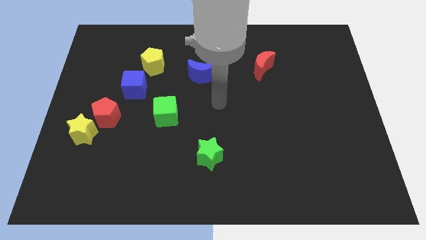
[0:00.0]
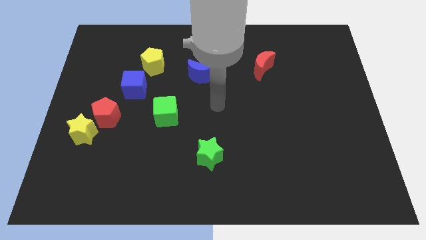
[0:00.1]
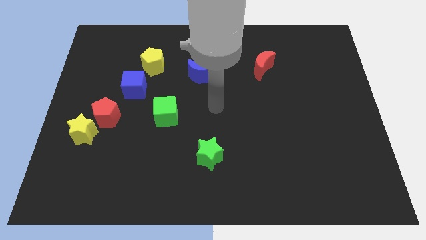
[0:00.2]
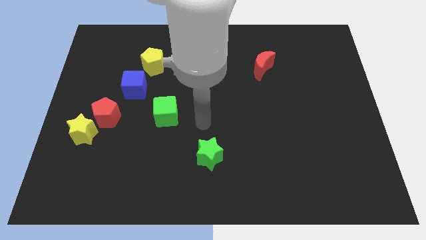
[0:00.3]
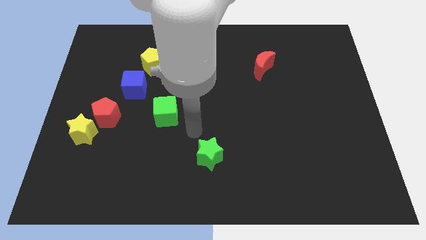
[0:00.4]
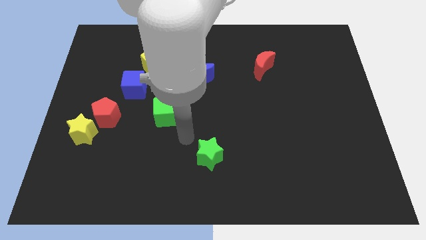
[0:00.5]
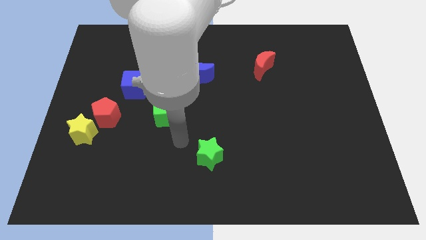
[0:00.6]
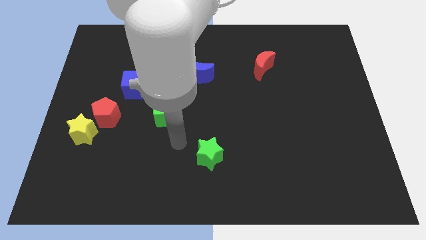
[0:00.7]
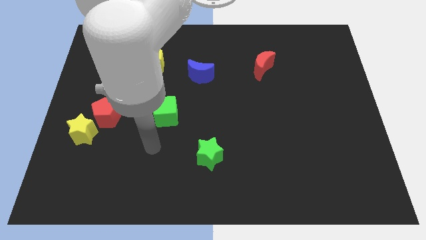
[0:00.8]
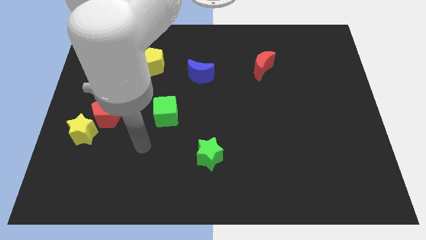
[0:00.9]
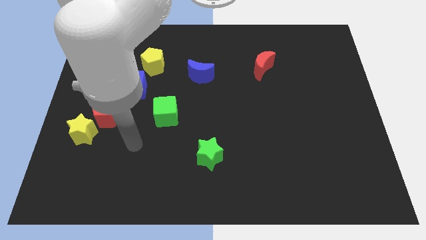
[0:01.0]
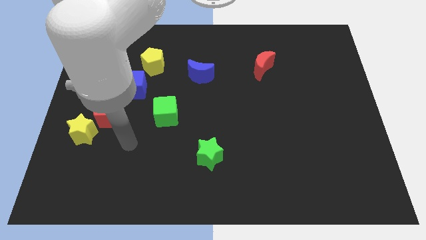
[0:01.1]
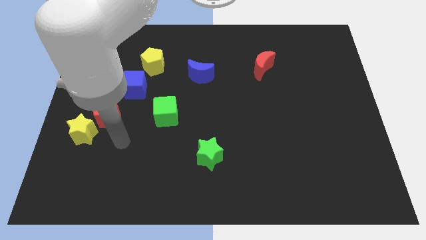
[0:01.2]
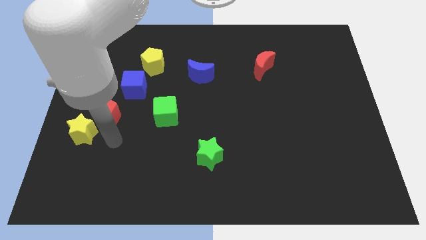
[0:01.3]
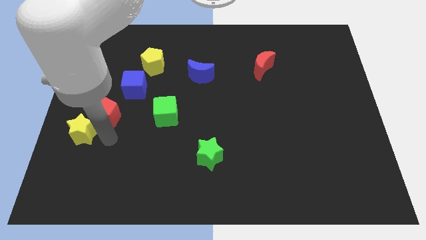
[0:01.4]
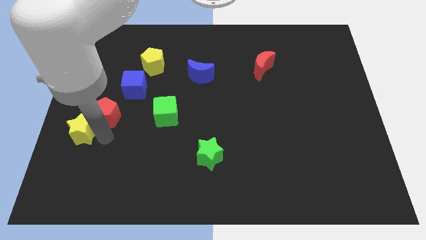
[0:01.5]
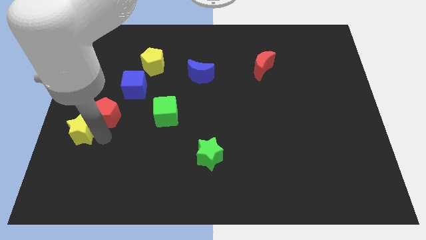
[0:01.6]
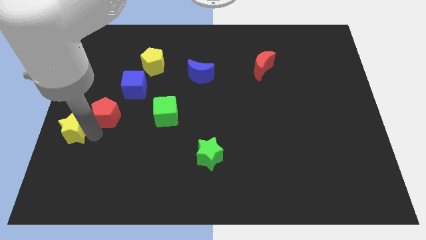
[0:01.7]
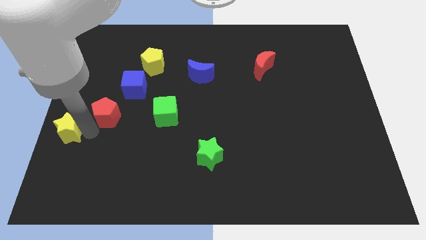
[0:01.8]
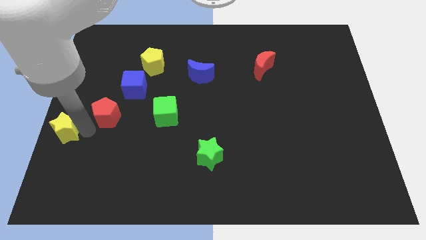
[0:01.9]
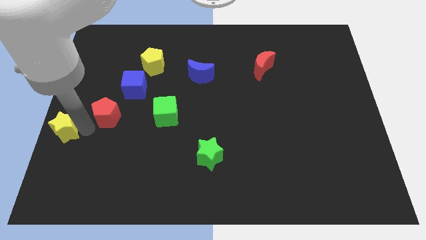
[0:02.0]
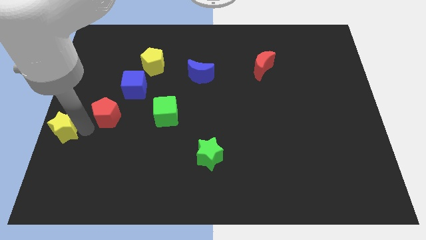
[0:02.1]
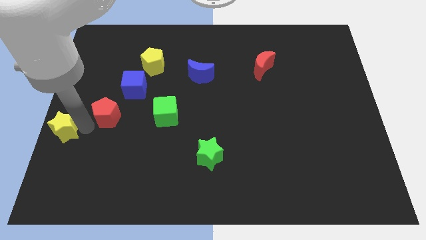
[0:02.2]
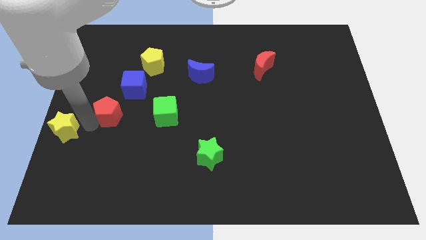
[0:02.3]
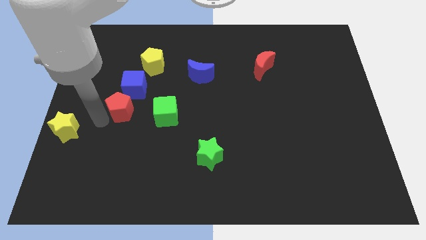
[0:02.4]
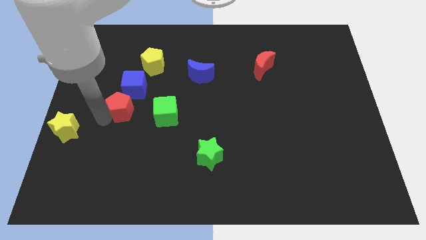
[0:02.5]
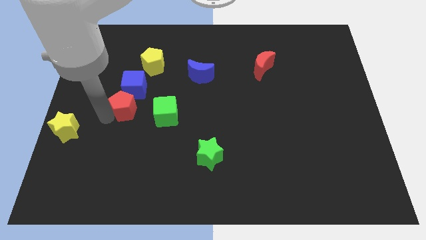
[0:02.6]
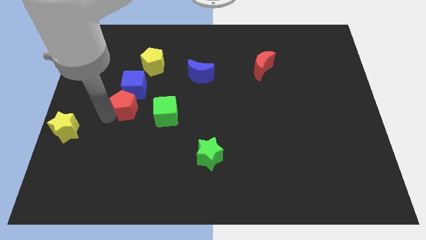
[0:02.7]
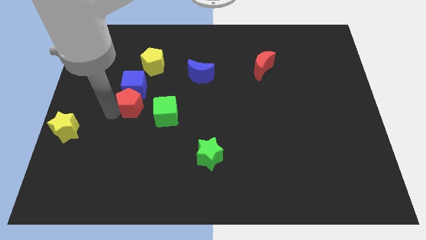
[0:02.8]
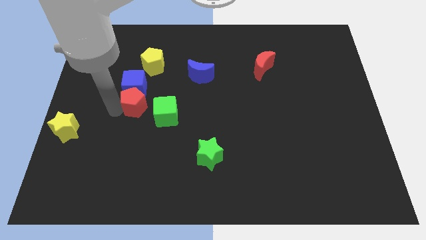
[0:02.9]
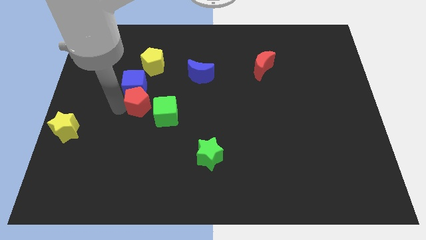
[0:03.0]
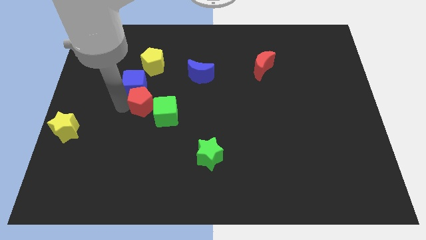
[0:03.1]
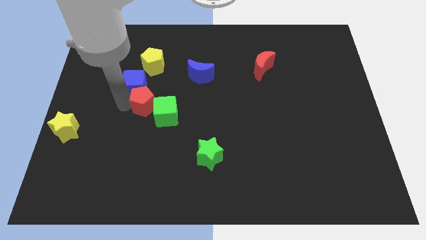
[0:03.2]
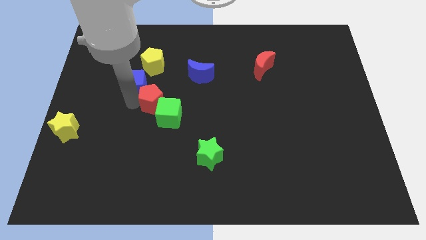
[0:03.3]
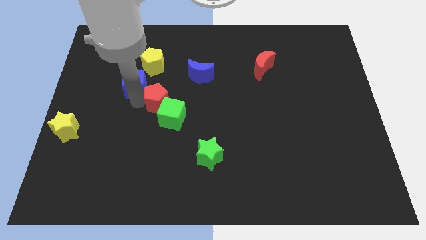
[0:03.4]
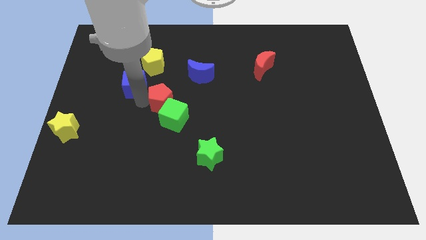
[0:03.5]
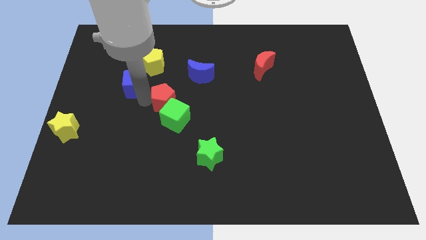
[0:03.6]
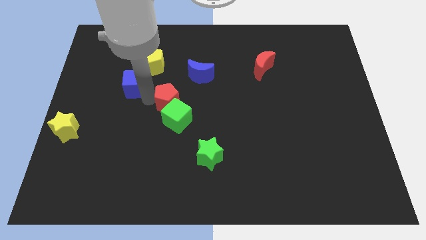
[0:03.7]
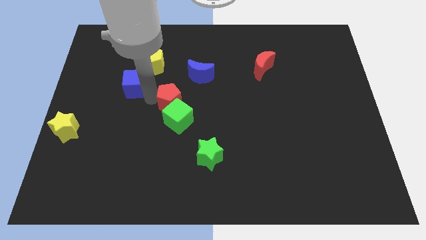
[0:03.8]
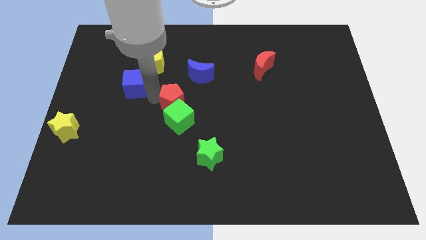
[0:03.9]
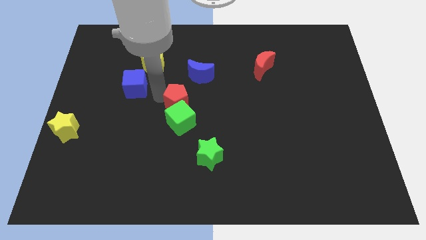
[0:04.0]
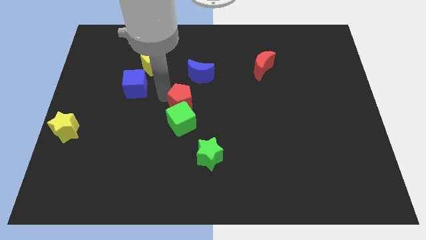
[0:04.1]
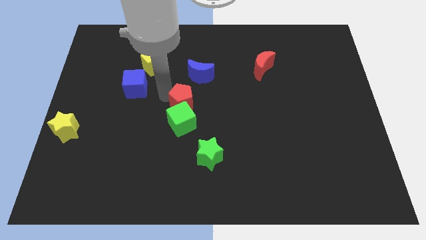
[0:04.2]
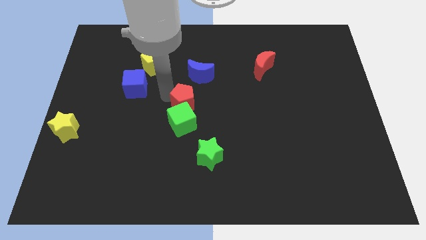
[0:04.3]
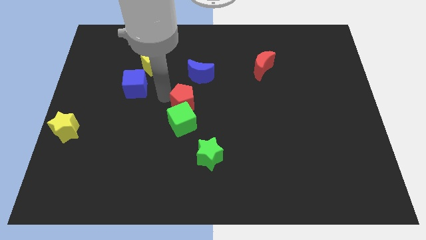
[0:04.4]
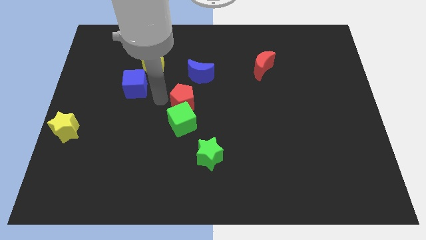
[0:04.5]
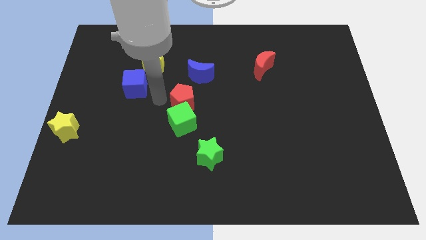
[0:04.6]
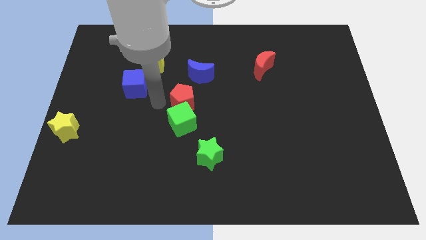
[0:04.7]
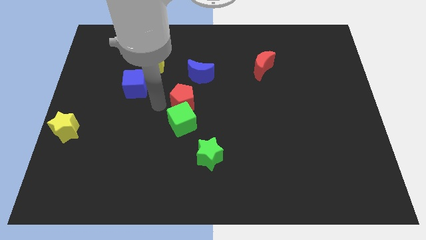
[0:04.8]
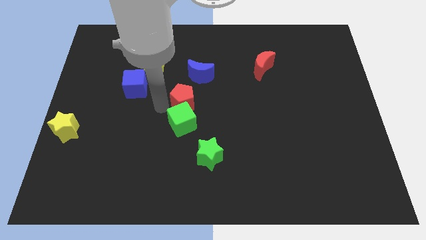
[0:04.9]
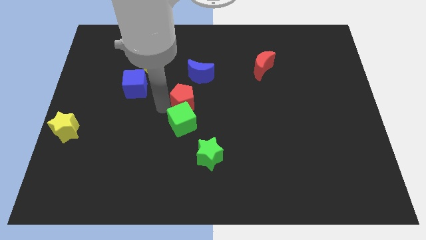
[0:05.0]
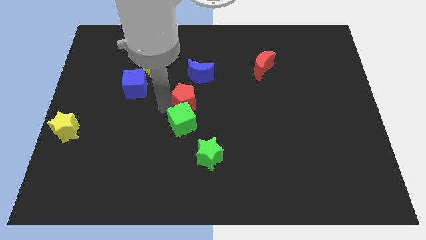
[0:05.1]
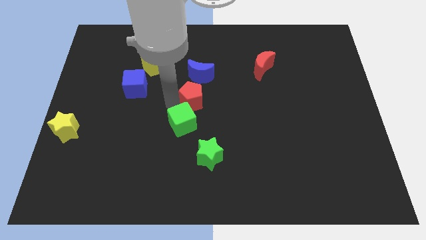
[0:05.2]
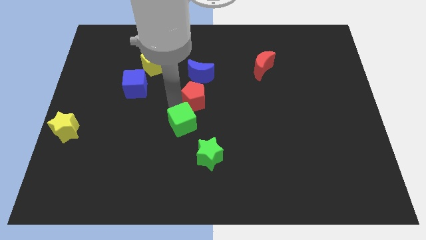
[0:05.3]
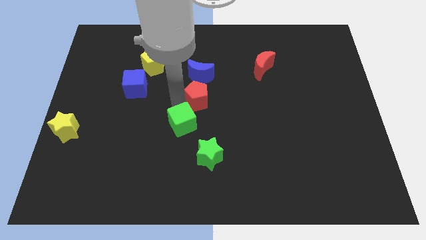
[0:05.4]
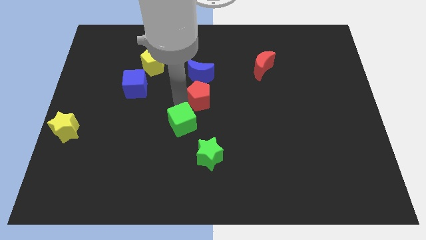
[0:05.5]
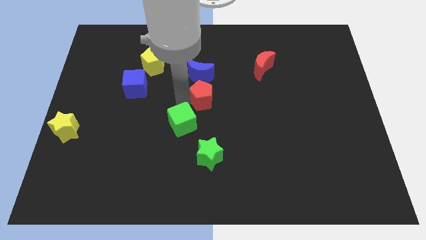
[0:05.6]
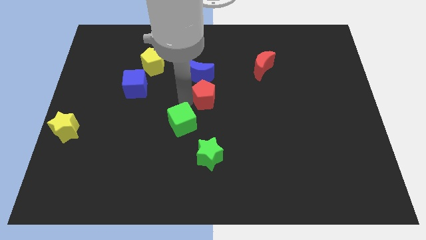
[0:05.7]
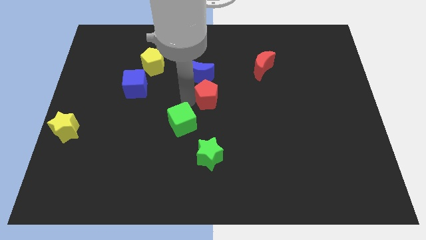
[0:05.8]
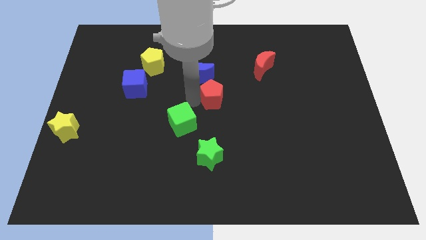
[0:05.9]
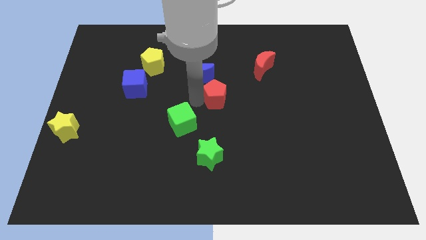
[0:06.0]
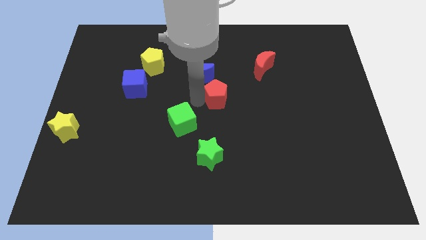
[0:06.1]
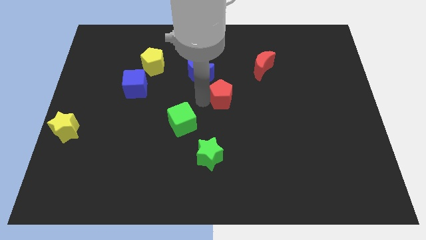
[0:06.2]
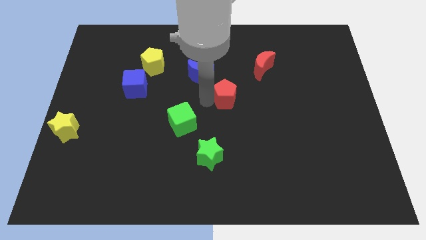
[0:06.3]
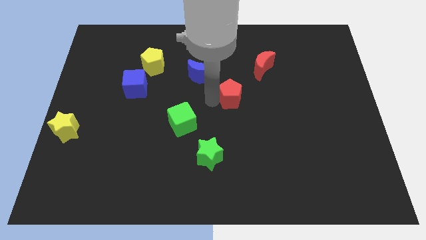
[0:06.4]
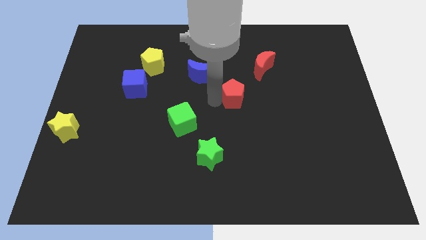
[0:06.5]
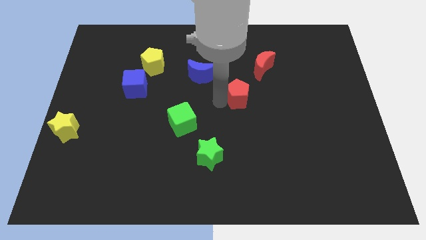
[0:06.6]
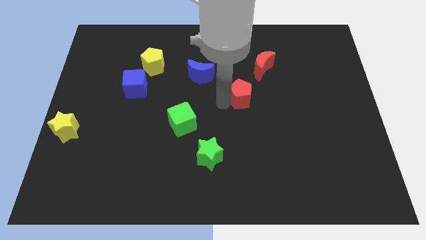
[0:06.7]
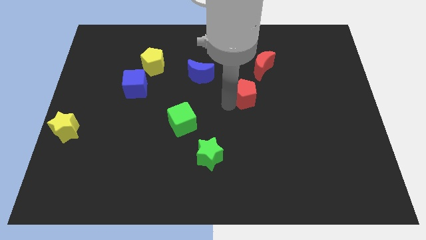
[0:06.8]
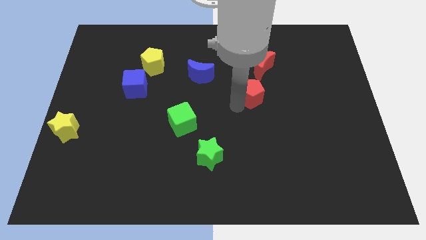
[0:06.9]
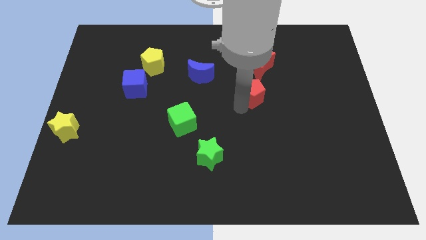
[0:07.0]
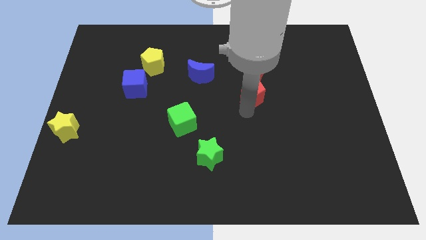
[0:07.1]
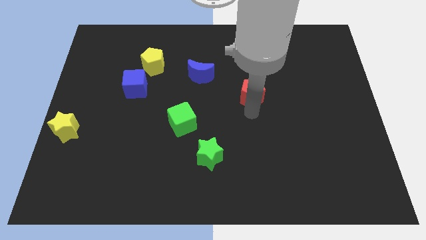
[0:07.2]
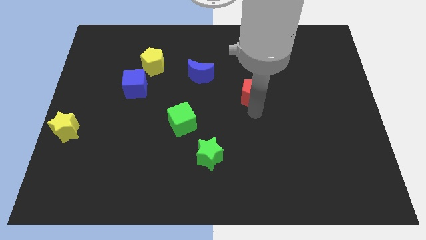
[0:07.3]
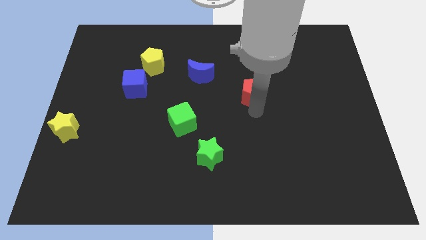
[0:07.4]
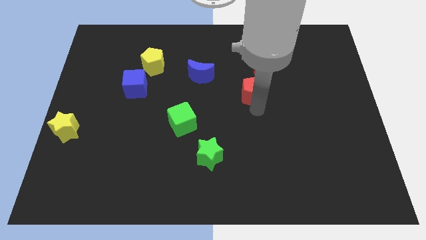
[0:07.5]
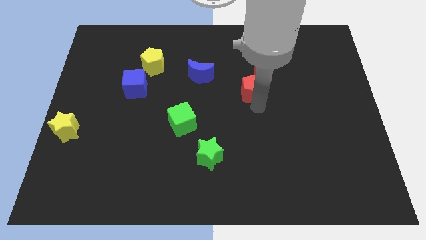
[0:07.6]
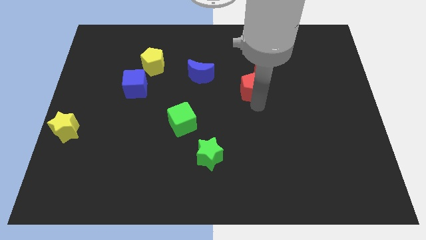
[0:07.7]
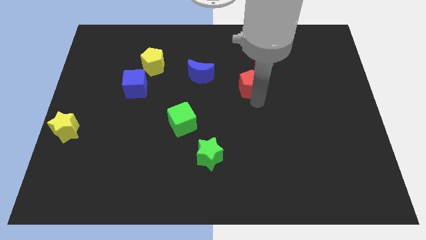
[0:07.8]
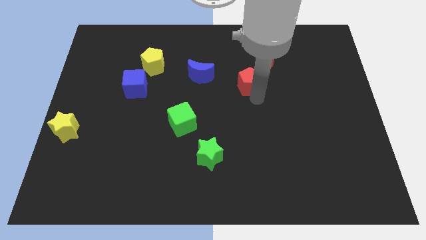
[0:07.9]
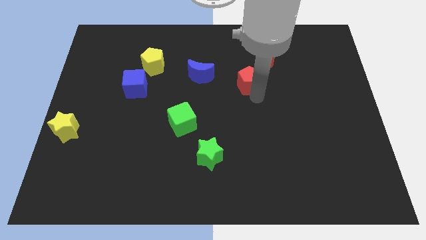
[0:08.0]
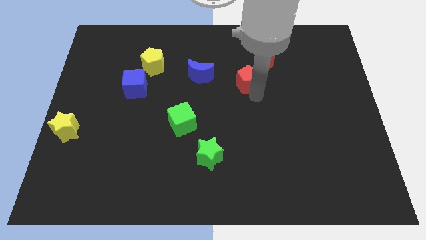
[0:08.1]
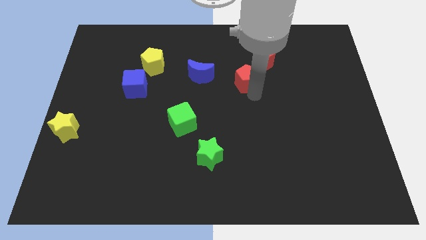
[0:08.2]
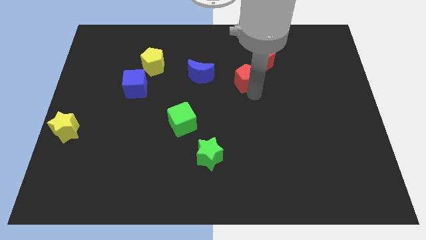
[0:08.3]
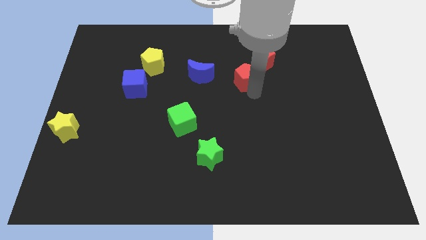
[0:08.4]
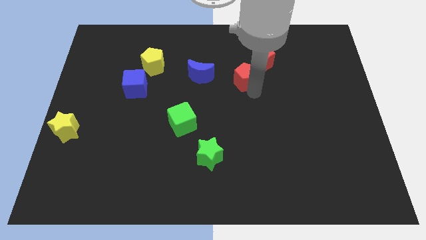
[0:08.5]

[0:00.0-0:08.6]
move the red pentagon towards the red moon

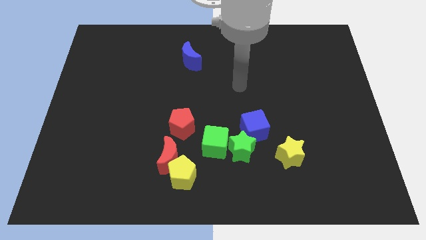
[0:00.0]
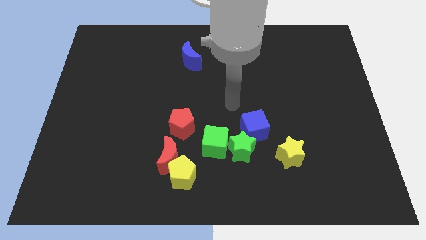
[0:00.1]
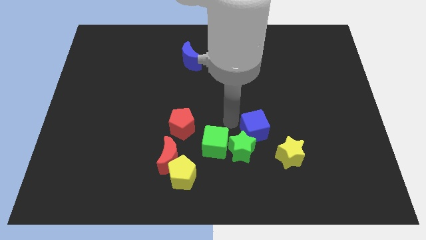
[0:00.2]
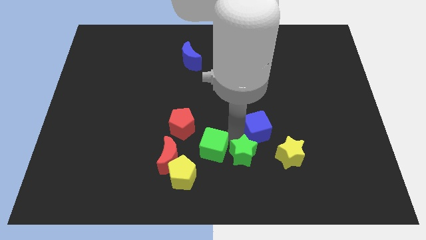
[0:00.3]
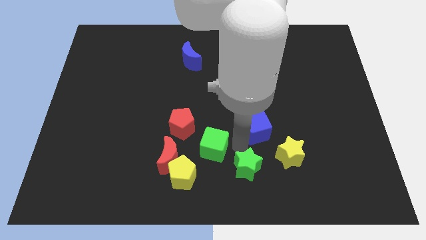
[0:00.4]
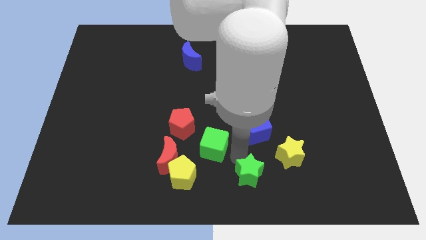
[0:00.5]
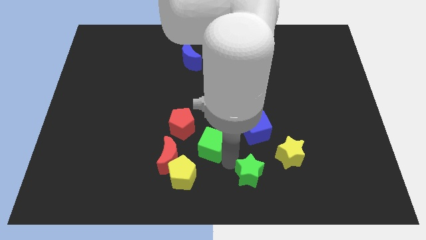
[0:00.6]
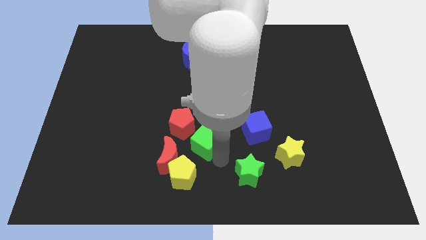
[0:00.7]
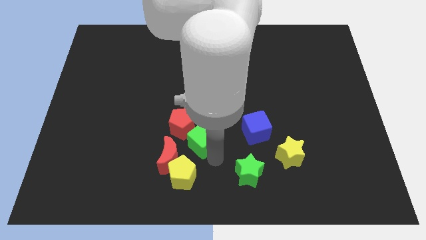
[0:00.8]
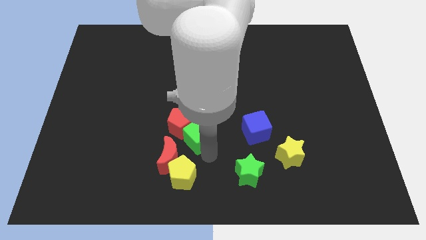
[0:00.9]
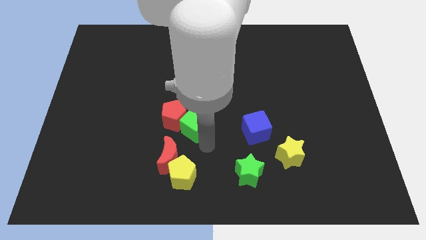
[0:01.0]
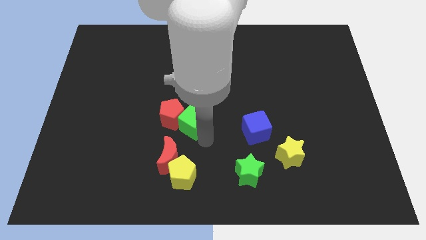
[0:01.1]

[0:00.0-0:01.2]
move the green cube next to the red pentagon
